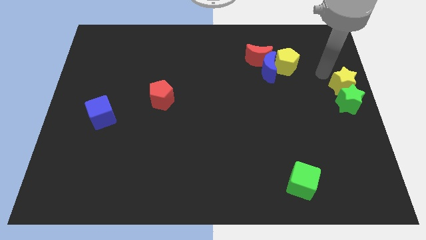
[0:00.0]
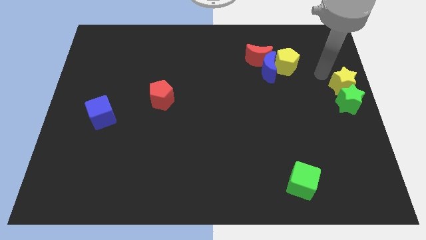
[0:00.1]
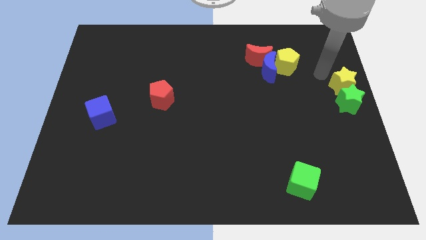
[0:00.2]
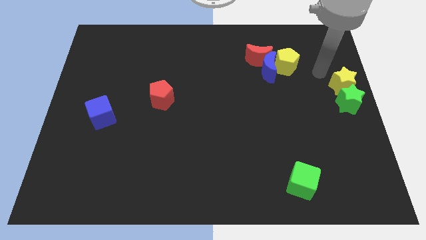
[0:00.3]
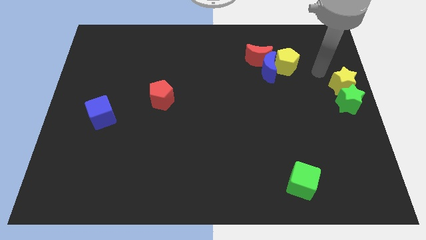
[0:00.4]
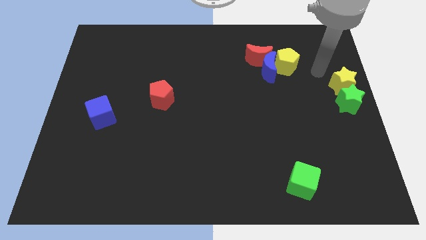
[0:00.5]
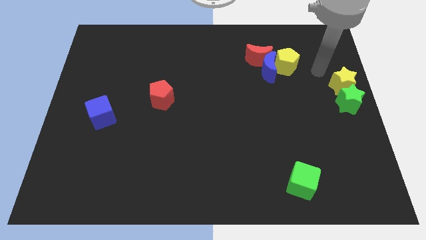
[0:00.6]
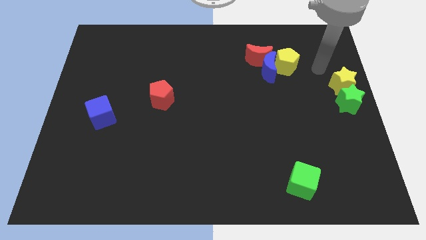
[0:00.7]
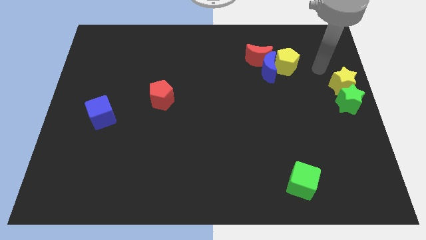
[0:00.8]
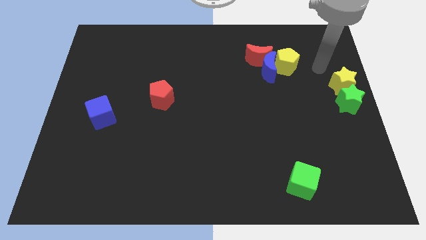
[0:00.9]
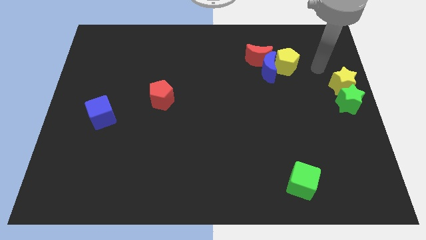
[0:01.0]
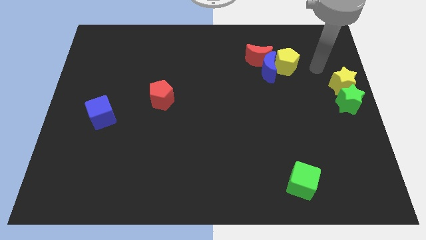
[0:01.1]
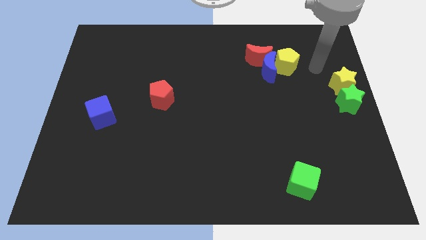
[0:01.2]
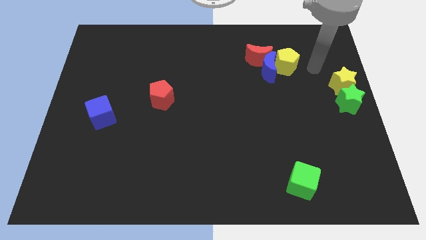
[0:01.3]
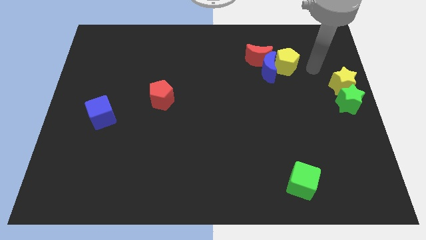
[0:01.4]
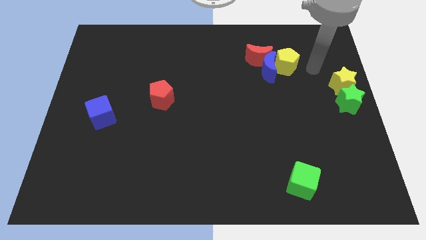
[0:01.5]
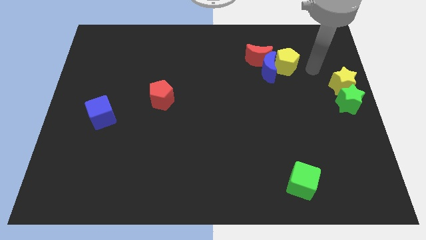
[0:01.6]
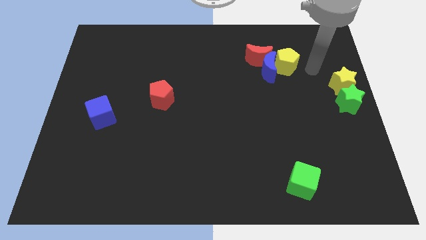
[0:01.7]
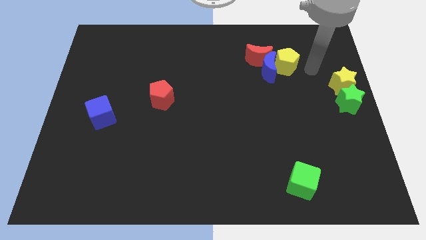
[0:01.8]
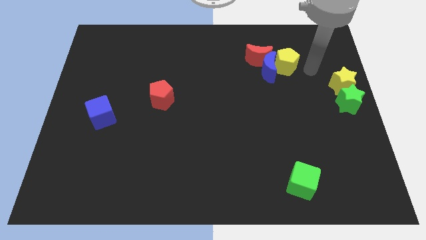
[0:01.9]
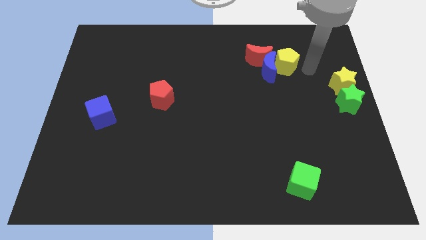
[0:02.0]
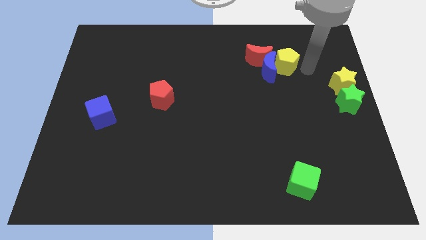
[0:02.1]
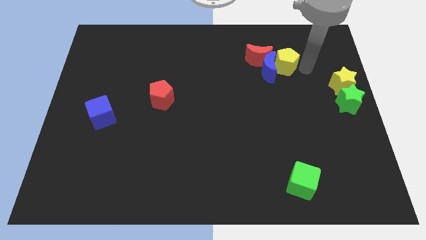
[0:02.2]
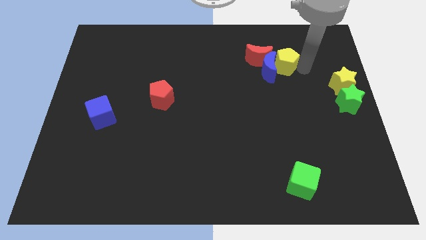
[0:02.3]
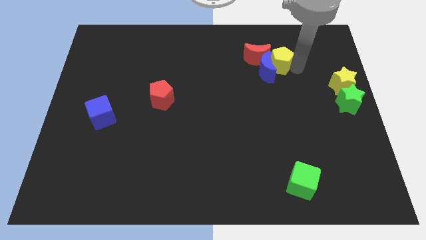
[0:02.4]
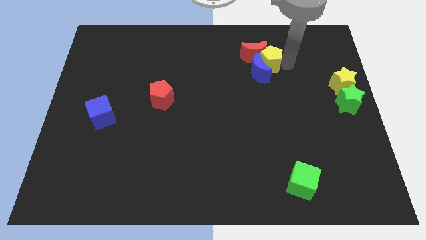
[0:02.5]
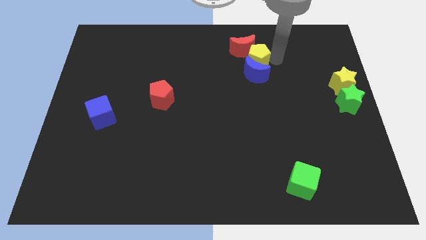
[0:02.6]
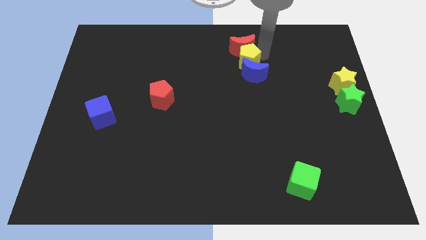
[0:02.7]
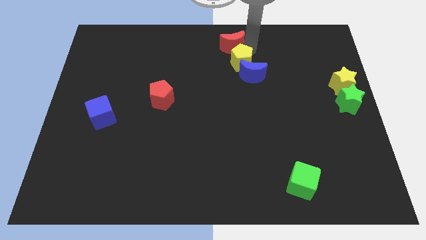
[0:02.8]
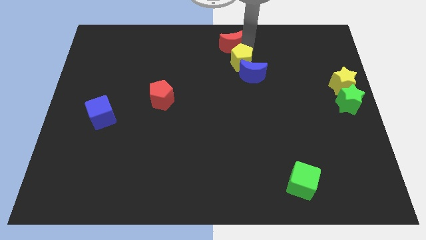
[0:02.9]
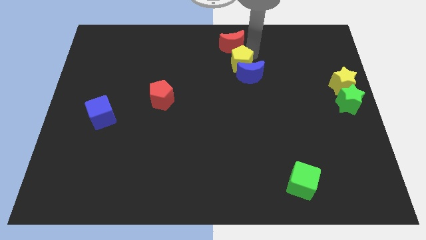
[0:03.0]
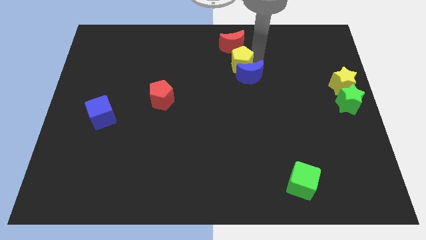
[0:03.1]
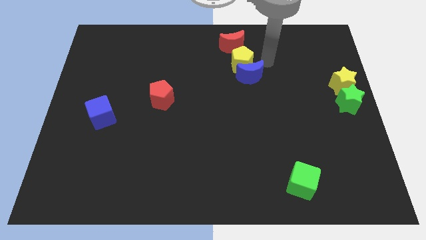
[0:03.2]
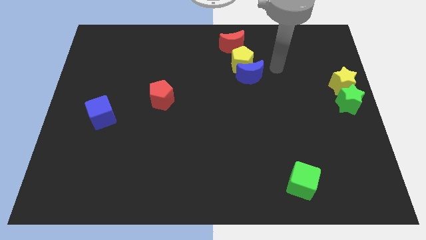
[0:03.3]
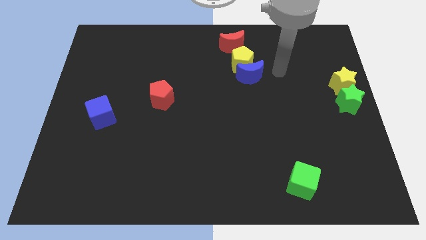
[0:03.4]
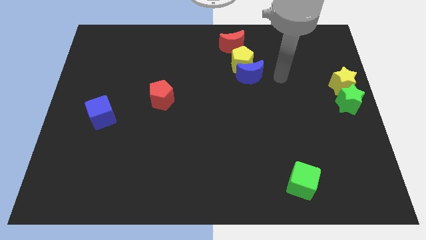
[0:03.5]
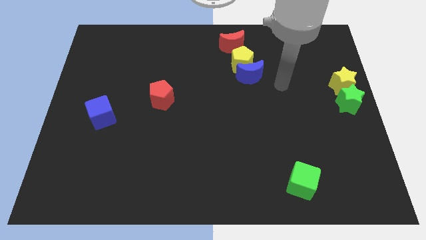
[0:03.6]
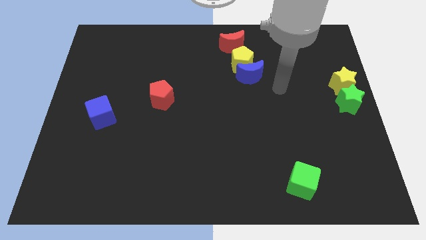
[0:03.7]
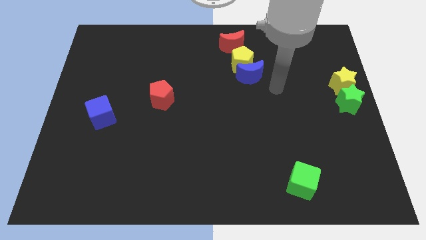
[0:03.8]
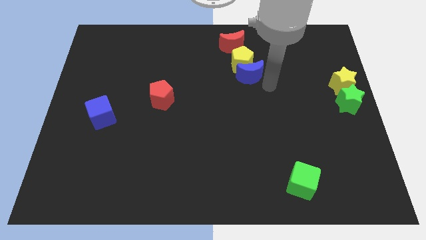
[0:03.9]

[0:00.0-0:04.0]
place the yellow pentagon in between red crescent and blue crescent

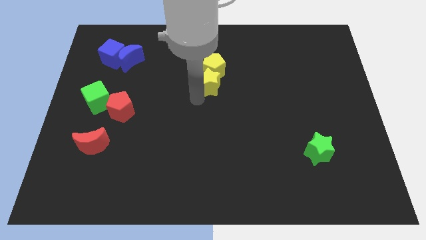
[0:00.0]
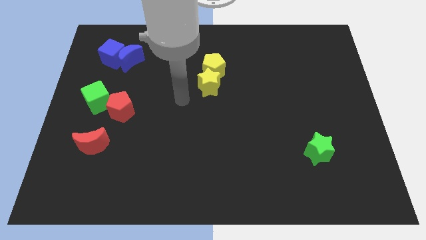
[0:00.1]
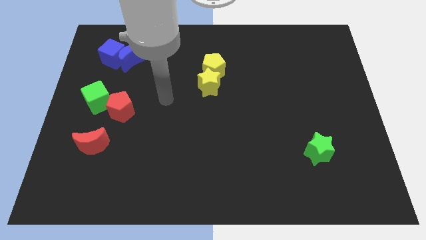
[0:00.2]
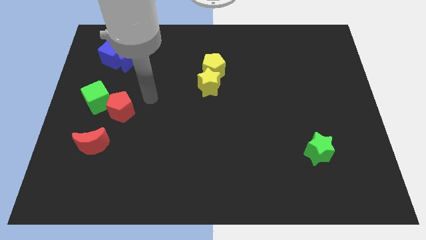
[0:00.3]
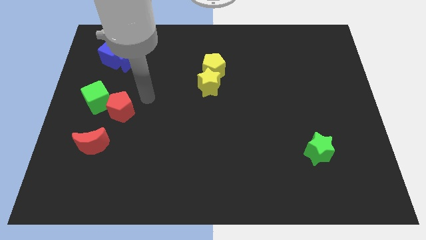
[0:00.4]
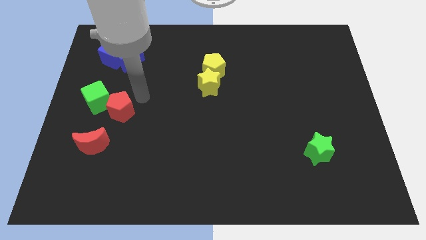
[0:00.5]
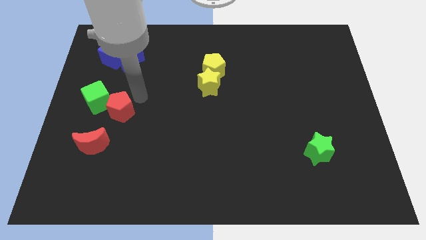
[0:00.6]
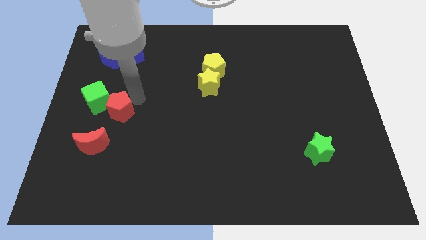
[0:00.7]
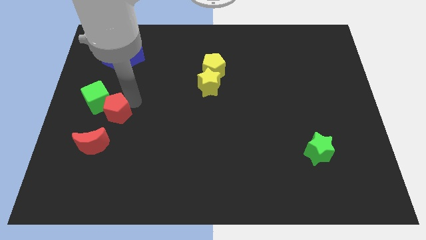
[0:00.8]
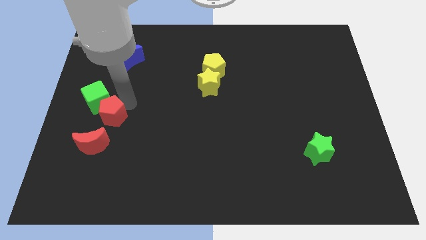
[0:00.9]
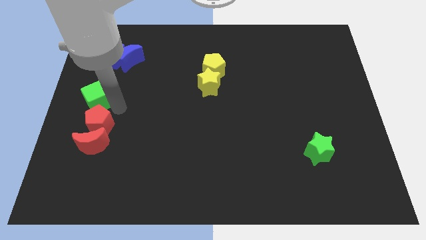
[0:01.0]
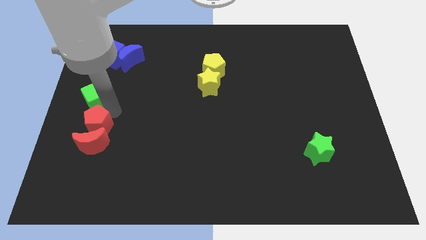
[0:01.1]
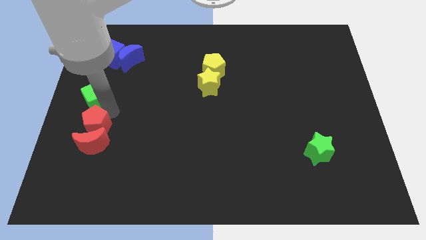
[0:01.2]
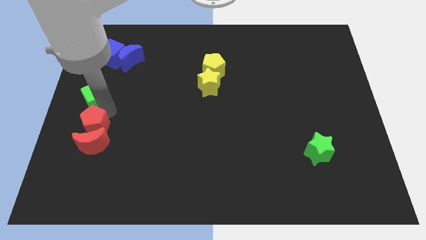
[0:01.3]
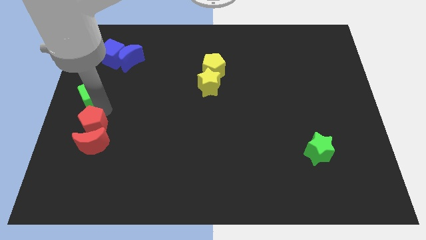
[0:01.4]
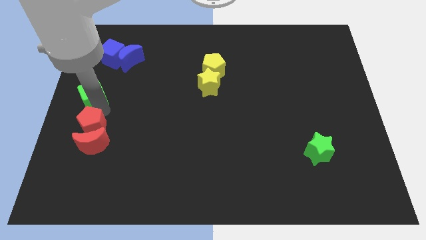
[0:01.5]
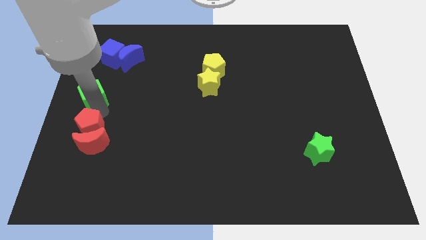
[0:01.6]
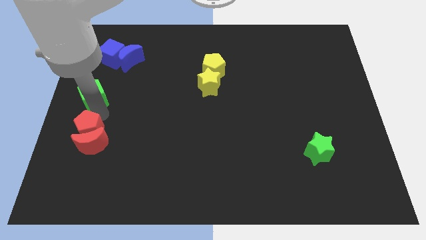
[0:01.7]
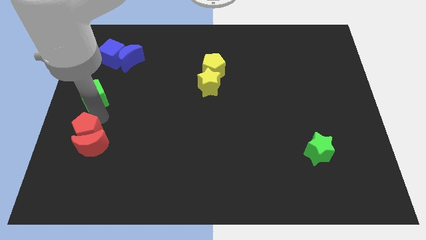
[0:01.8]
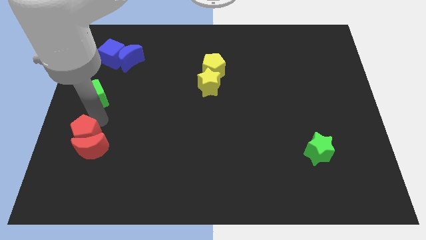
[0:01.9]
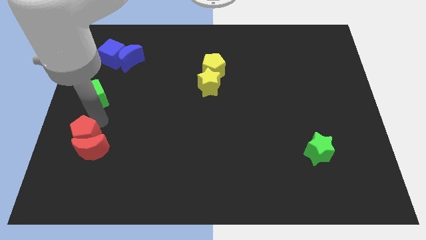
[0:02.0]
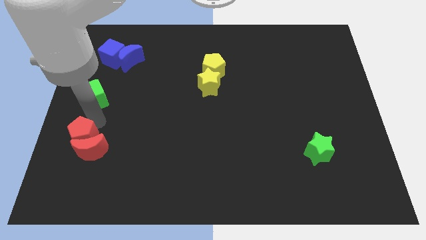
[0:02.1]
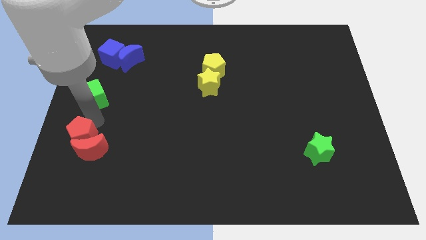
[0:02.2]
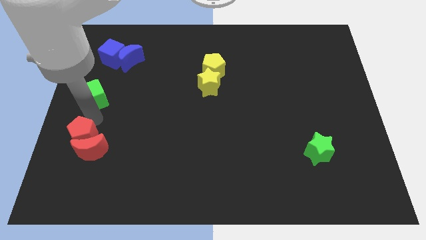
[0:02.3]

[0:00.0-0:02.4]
slide the red pentagon into red moon

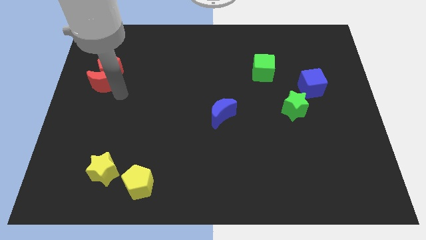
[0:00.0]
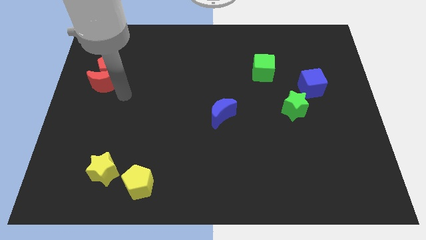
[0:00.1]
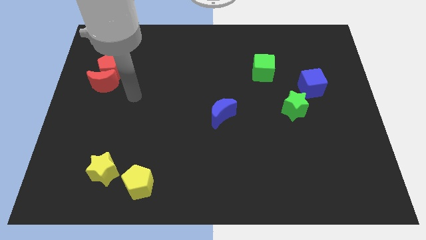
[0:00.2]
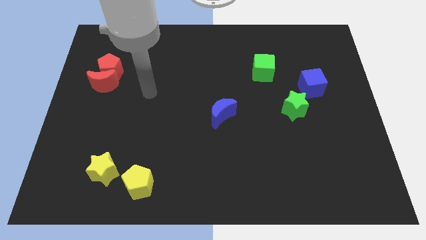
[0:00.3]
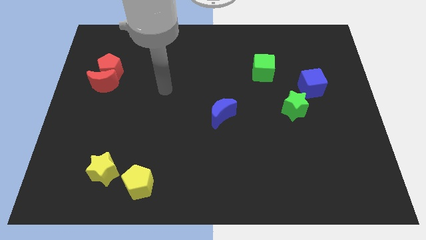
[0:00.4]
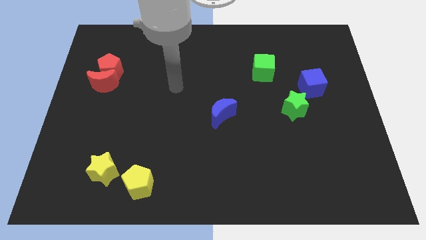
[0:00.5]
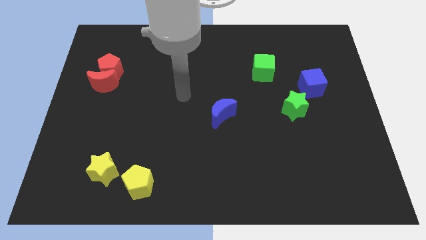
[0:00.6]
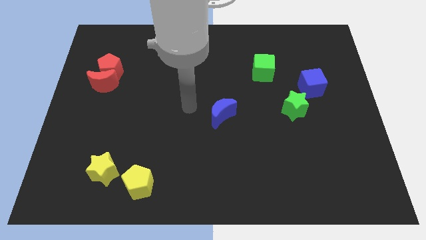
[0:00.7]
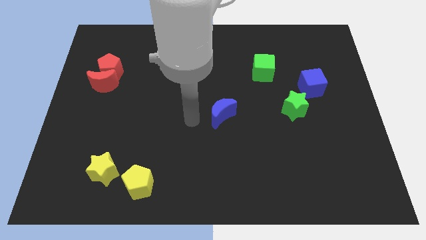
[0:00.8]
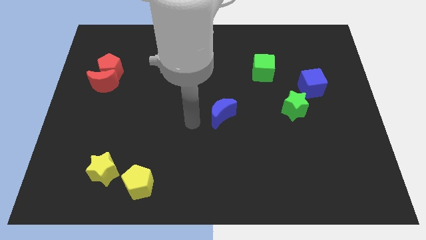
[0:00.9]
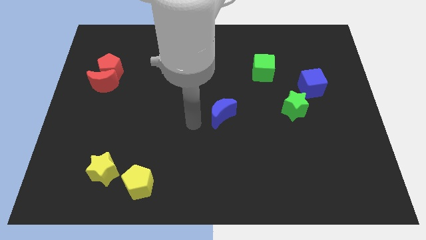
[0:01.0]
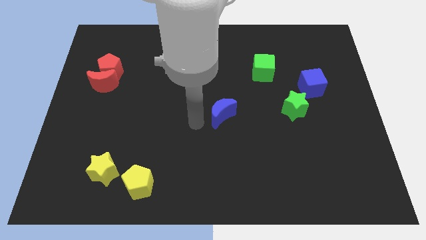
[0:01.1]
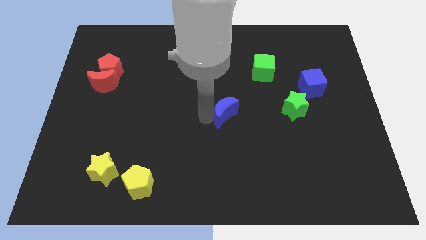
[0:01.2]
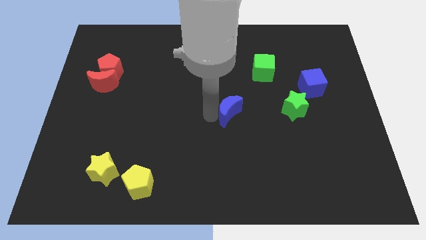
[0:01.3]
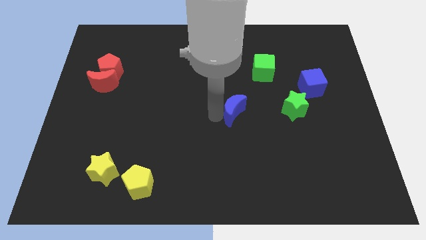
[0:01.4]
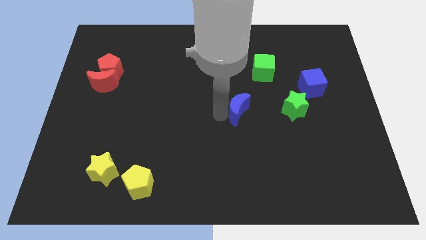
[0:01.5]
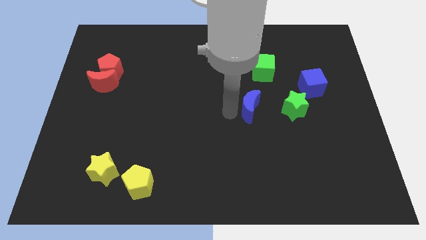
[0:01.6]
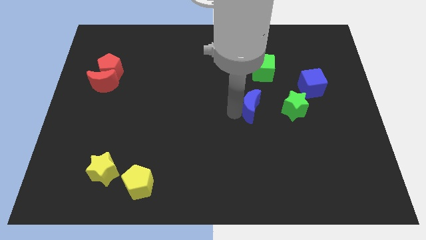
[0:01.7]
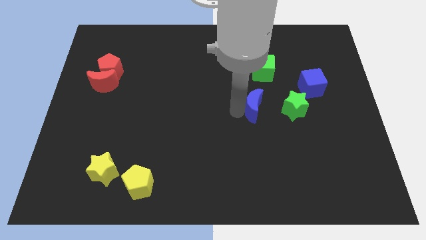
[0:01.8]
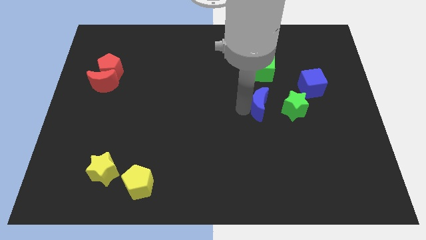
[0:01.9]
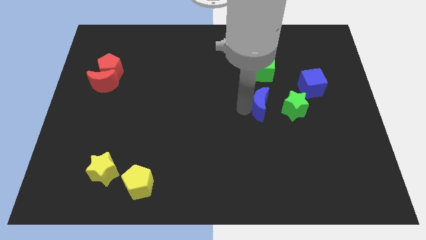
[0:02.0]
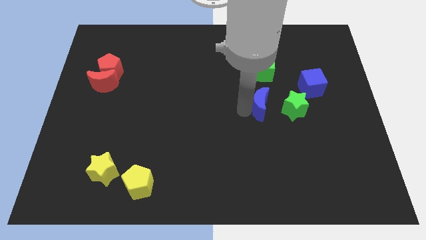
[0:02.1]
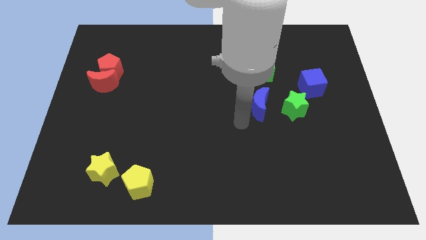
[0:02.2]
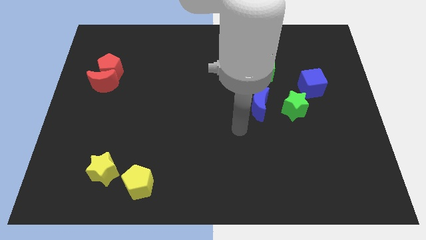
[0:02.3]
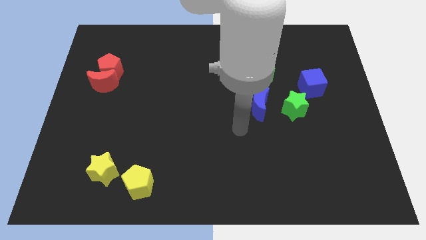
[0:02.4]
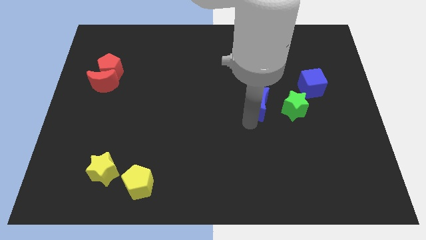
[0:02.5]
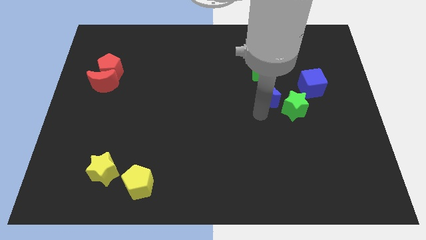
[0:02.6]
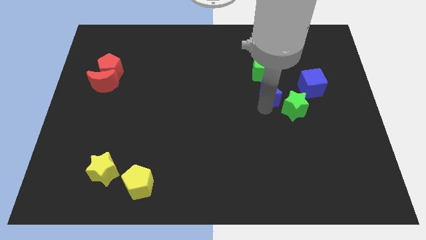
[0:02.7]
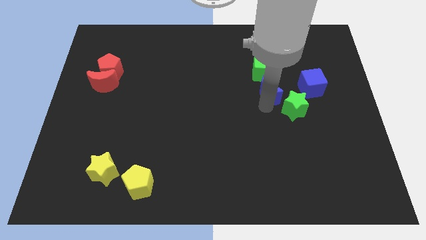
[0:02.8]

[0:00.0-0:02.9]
place the blue crescent in between the green star and the green cube
